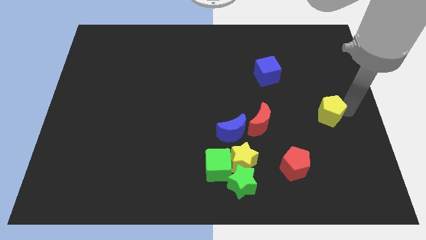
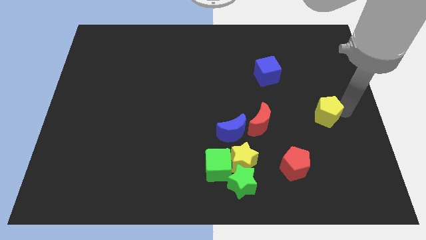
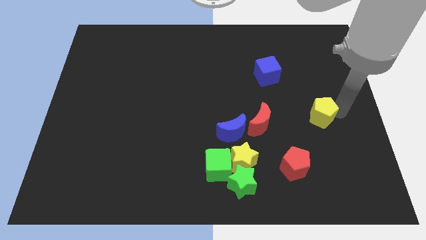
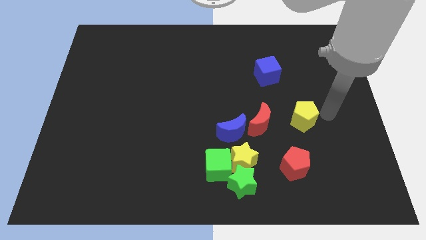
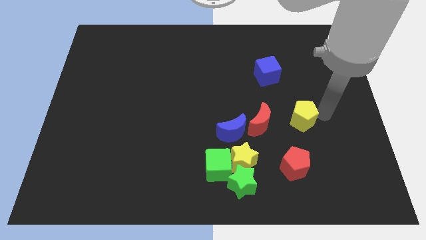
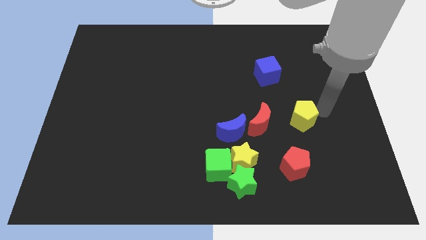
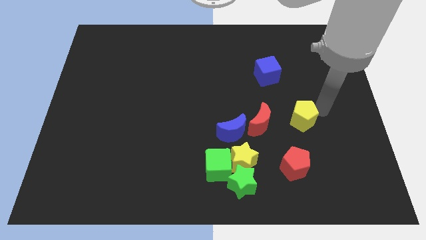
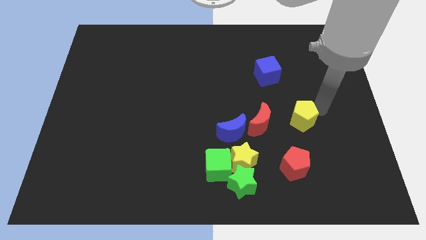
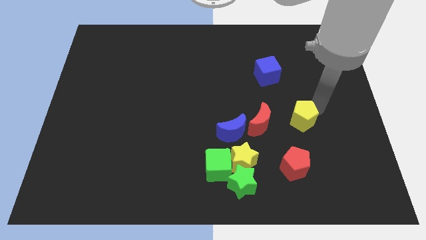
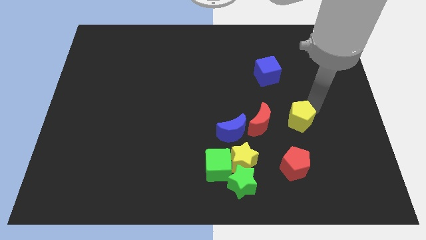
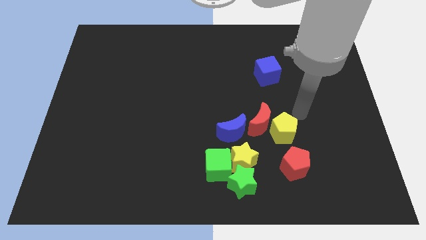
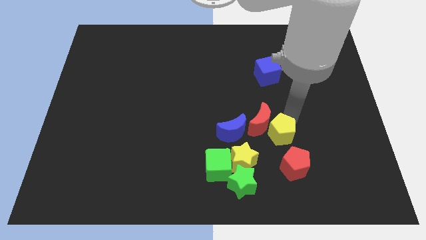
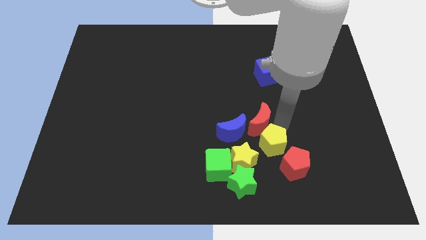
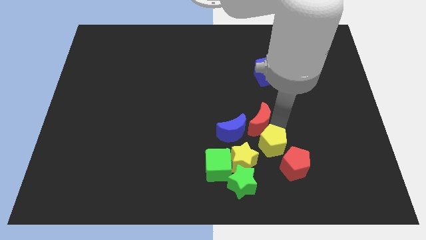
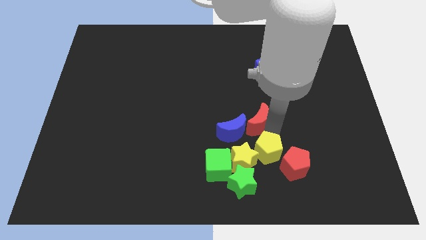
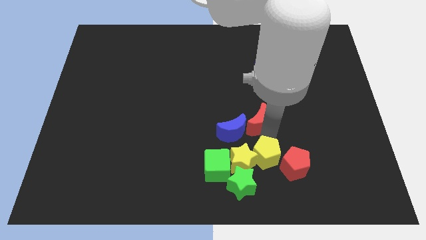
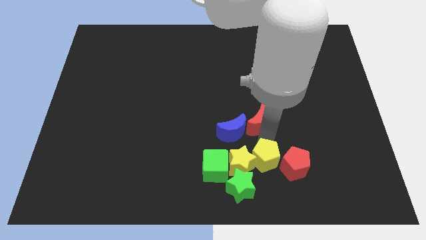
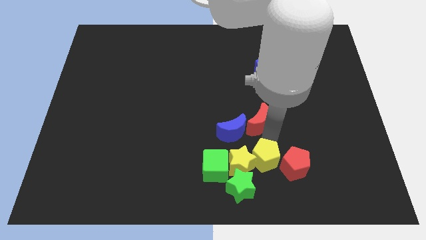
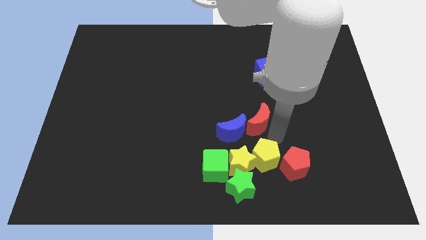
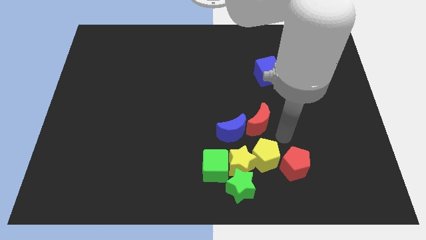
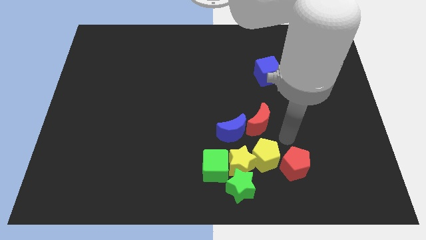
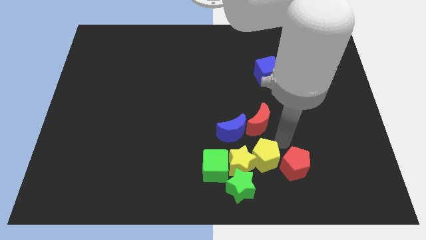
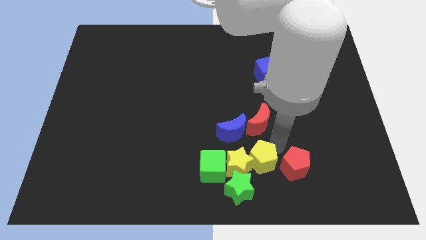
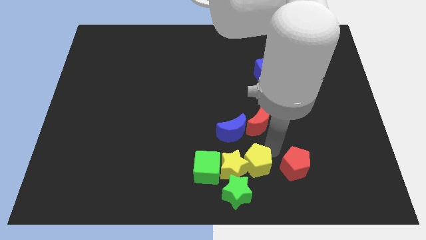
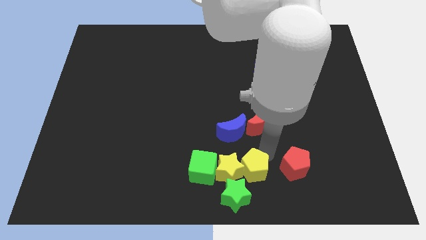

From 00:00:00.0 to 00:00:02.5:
push yellow pentagon into the group of blocks

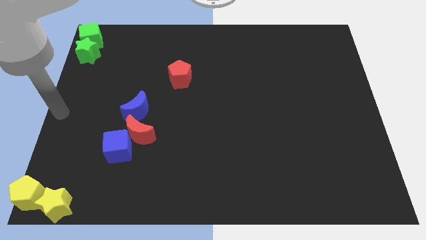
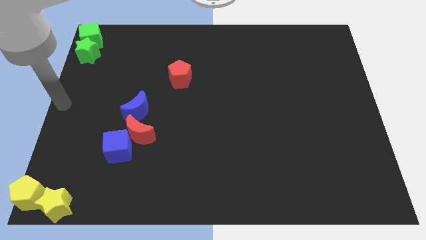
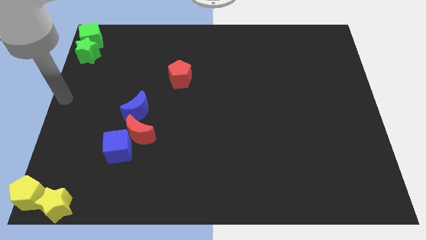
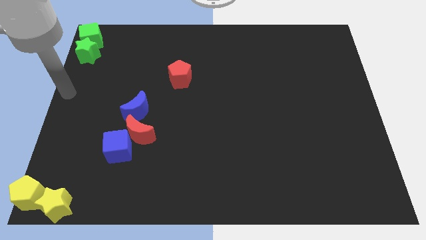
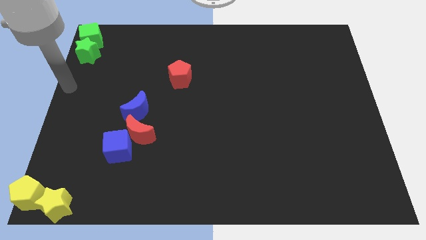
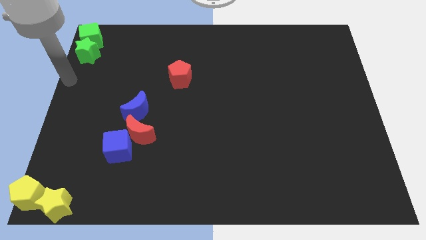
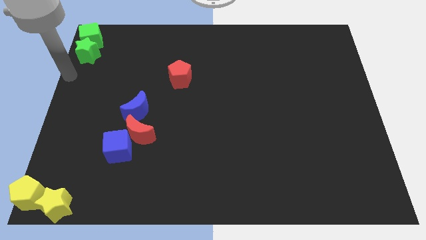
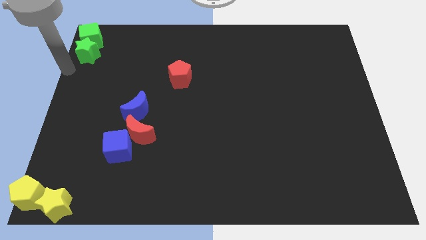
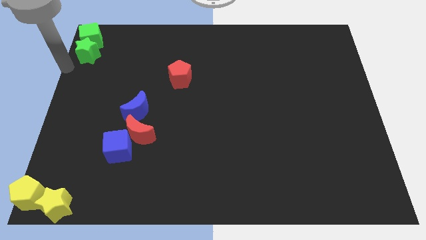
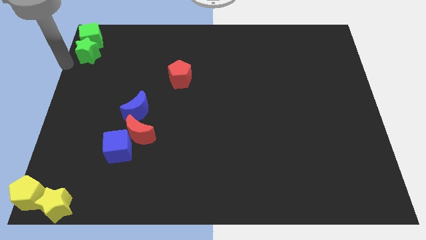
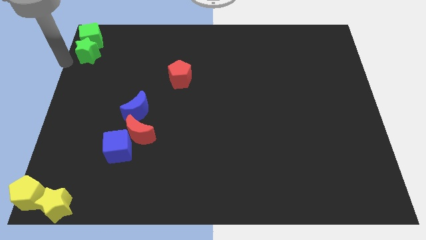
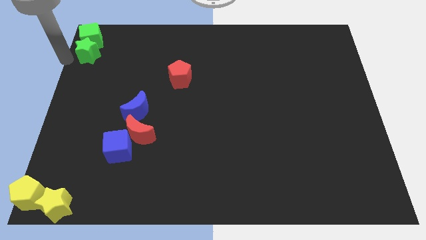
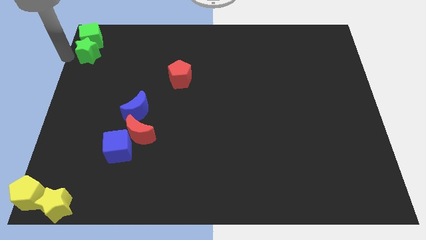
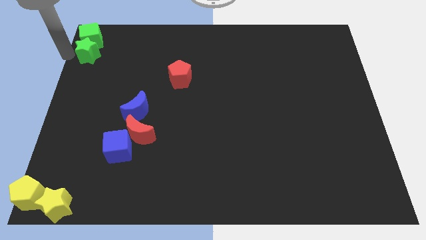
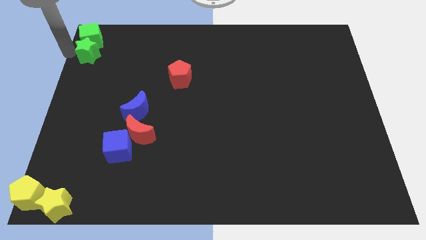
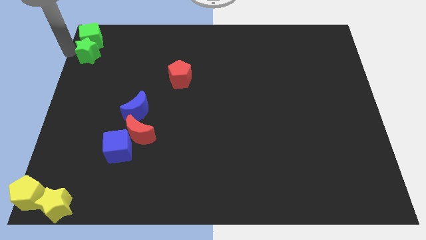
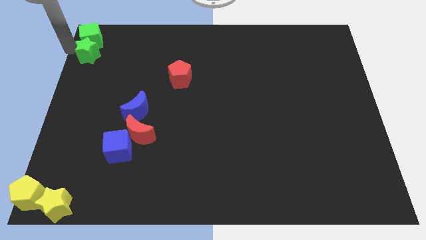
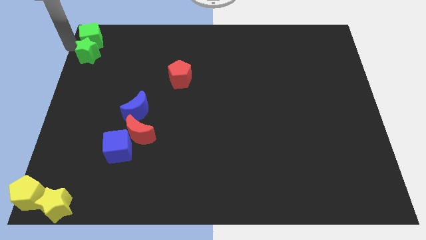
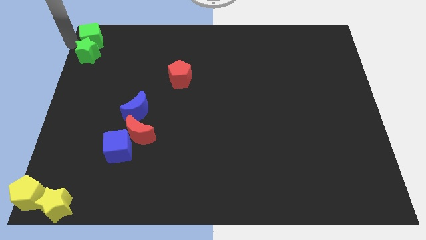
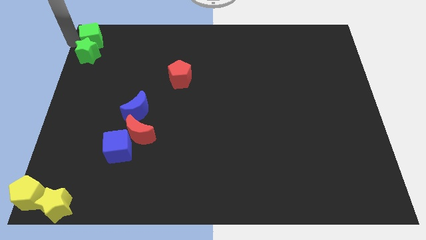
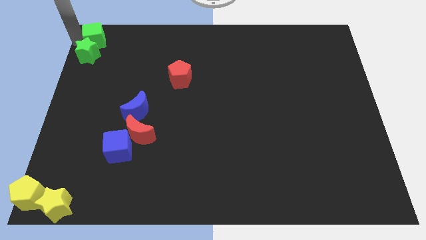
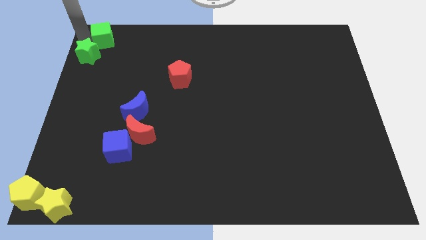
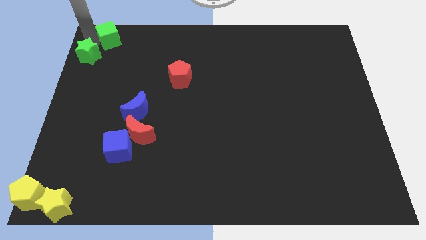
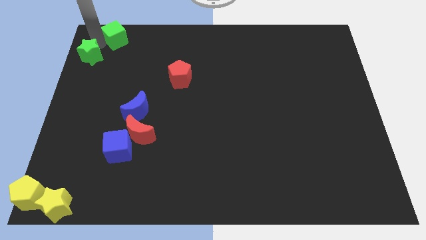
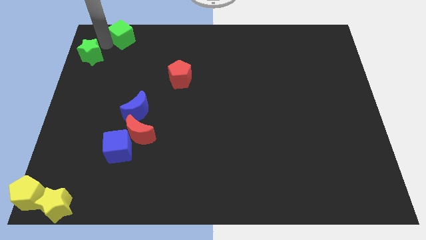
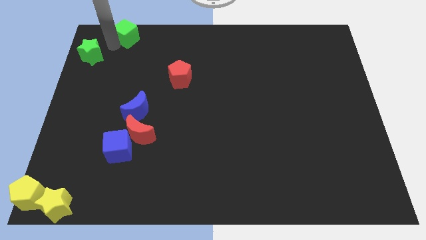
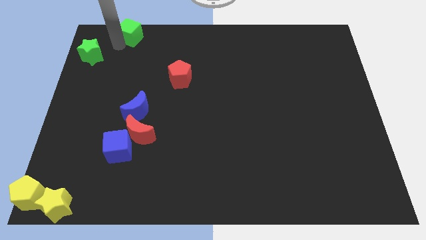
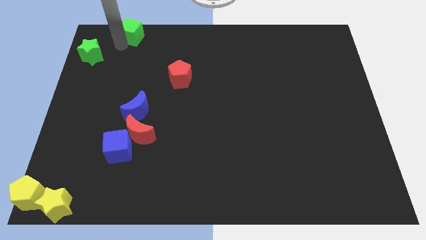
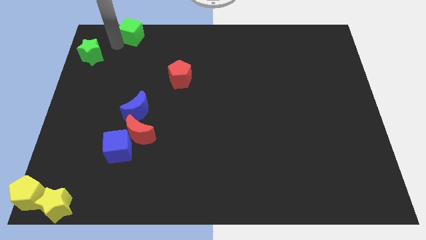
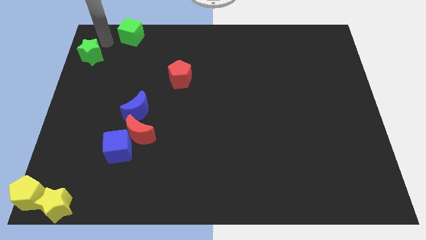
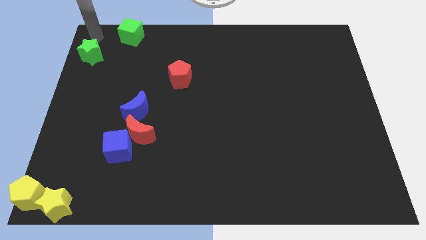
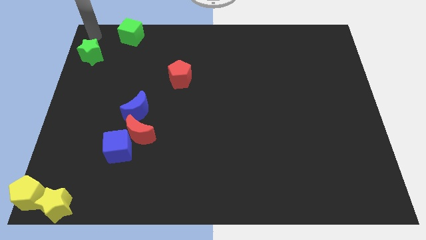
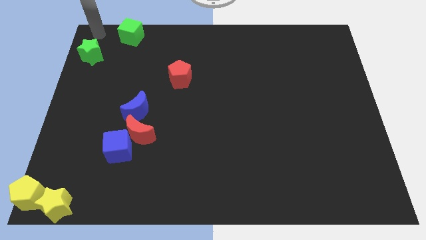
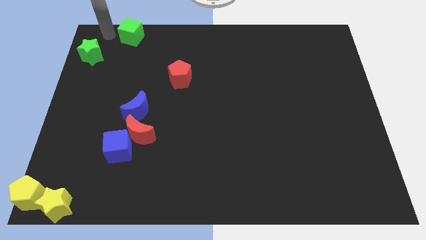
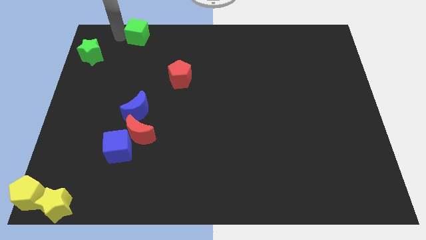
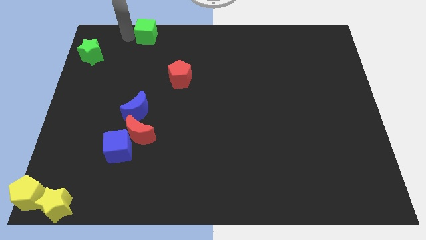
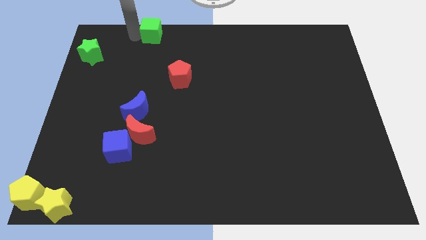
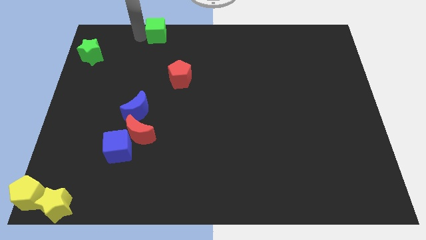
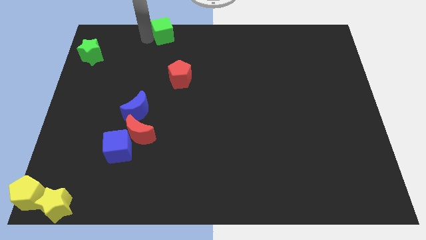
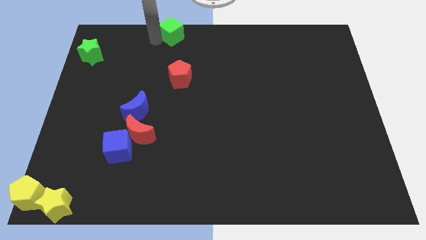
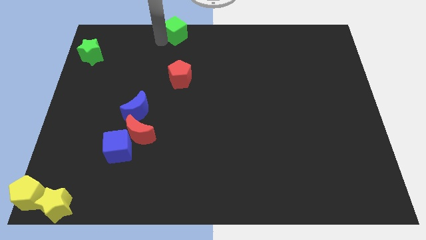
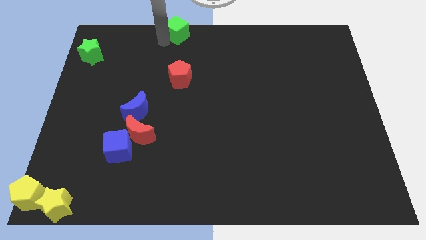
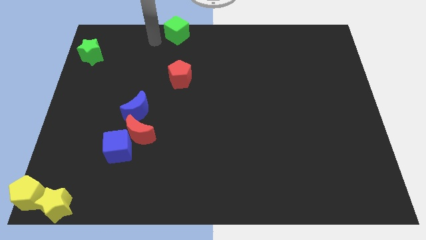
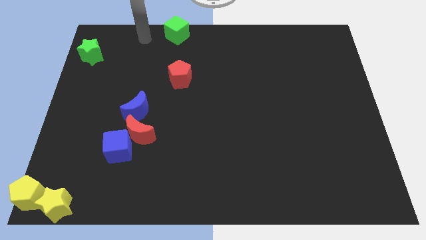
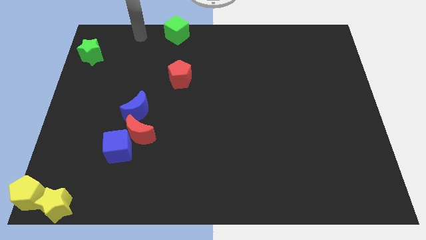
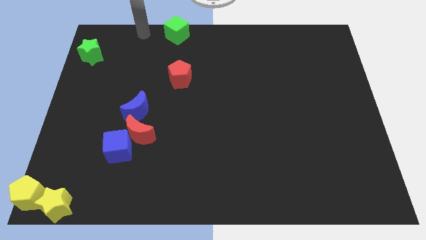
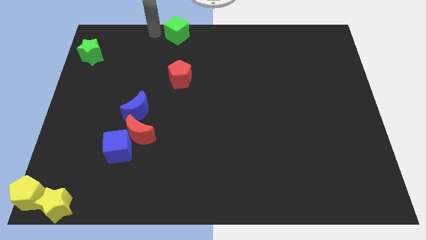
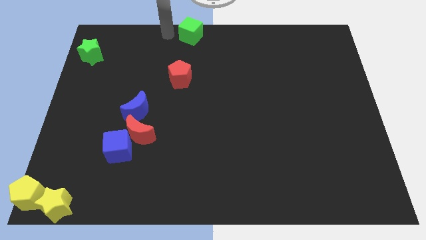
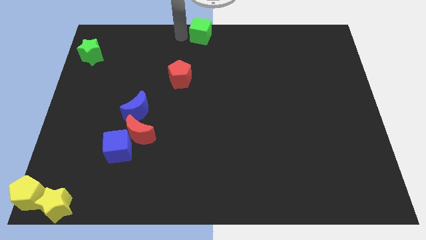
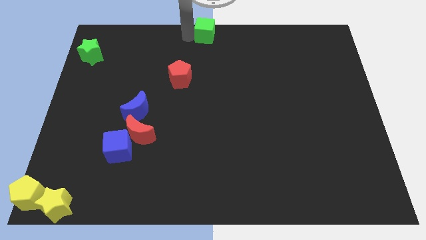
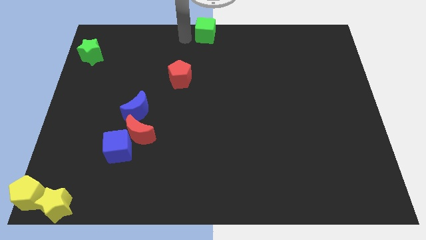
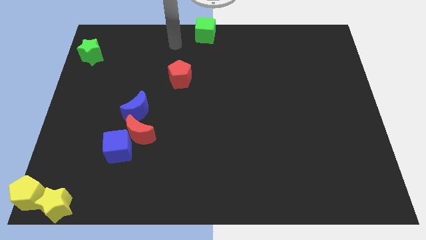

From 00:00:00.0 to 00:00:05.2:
move the green cube to the top center of the board

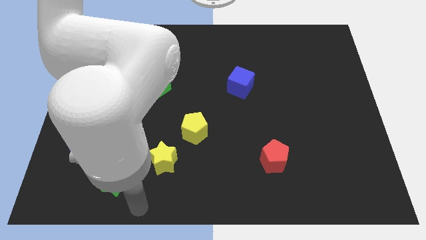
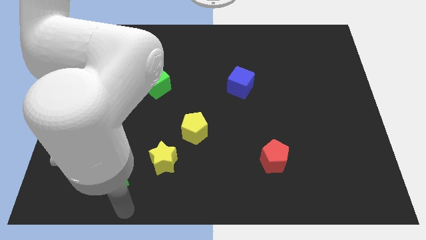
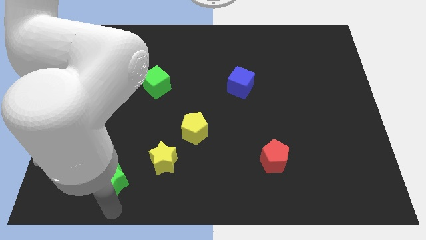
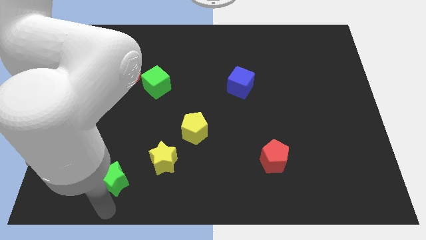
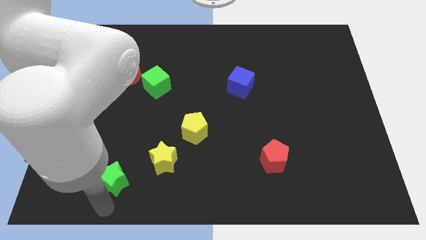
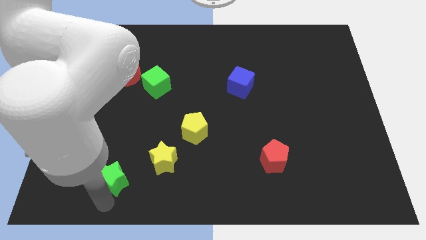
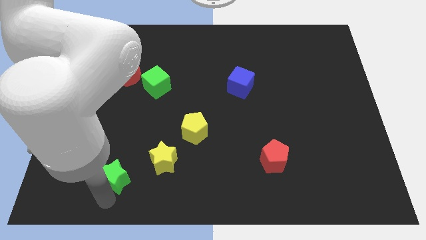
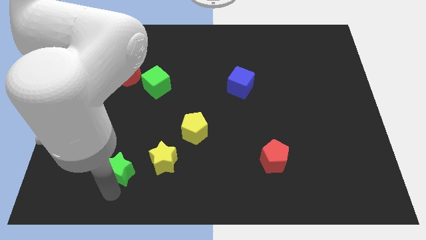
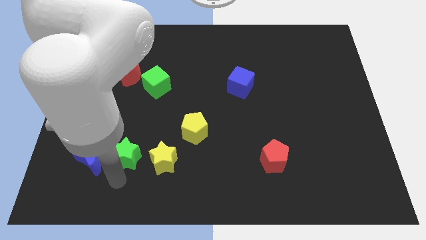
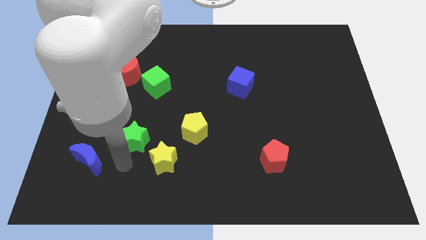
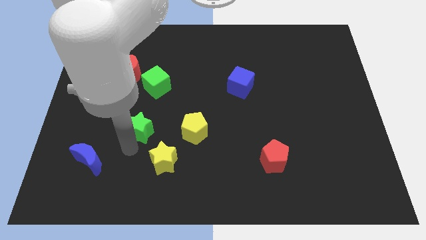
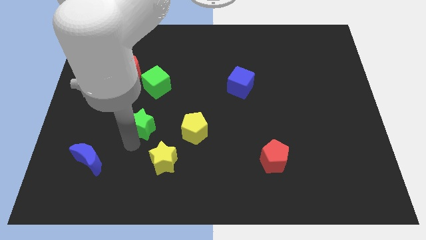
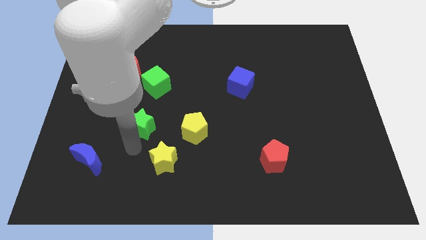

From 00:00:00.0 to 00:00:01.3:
push the green star towards the bottom side of the green cube
